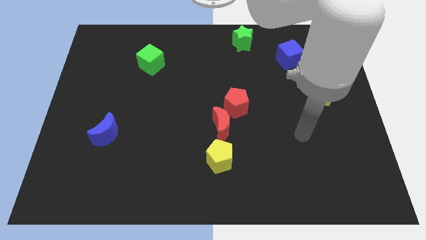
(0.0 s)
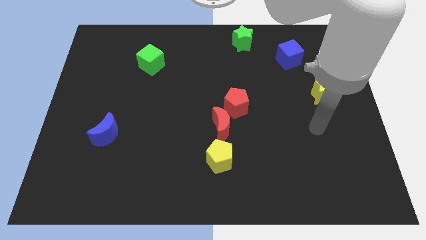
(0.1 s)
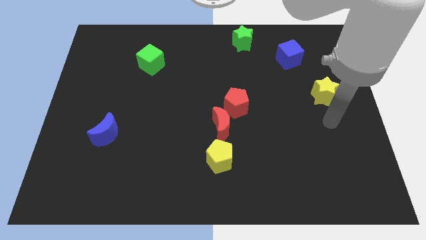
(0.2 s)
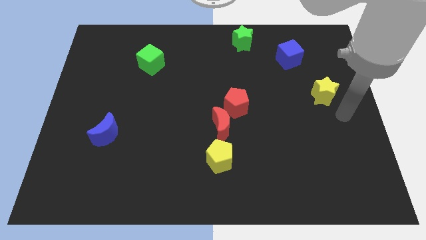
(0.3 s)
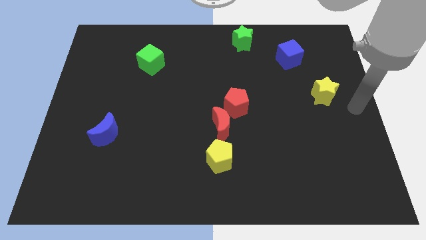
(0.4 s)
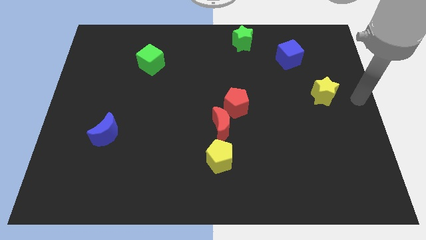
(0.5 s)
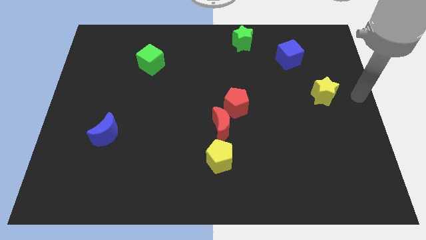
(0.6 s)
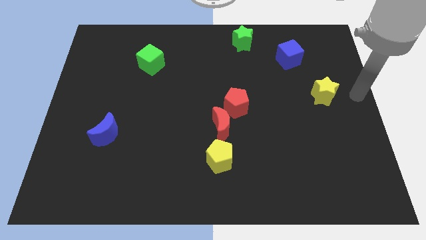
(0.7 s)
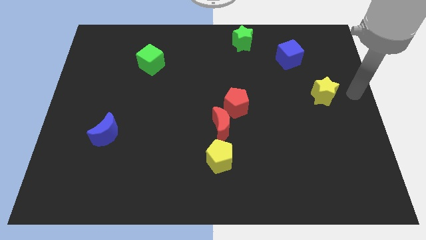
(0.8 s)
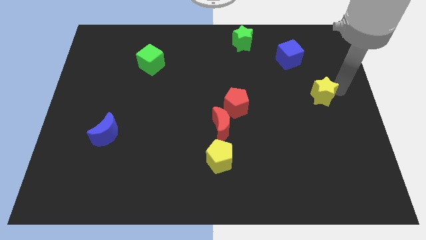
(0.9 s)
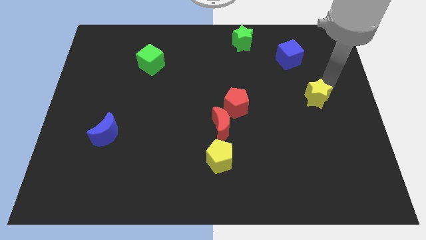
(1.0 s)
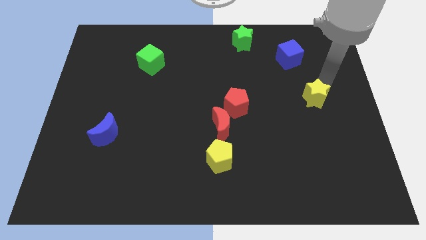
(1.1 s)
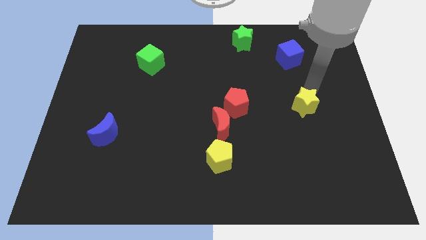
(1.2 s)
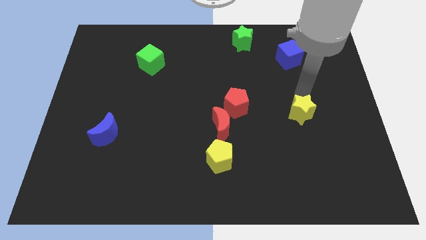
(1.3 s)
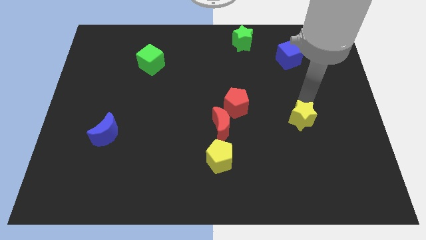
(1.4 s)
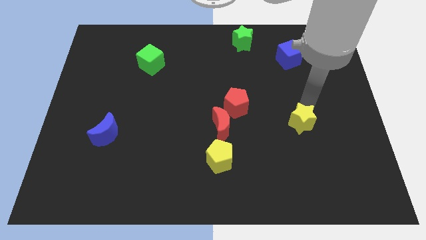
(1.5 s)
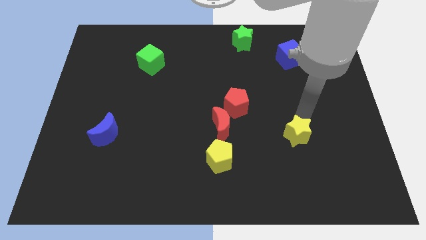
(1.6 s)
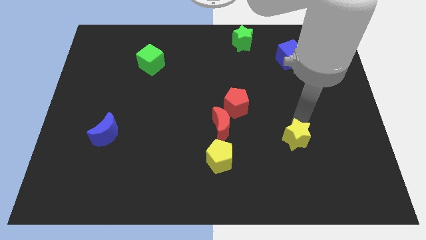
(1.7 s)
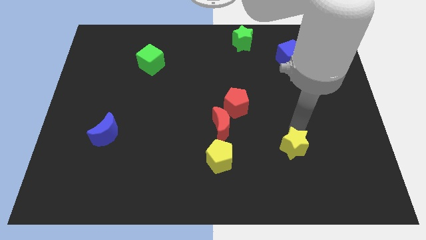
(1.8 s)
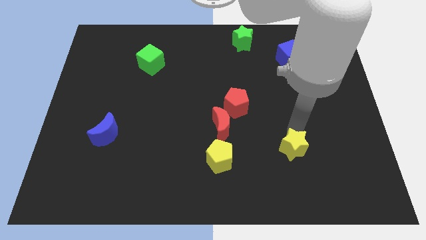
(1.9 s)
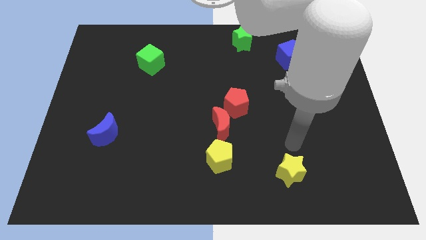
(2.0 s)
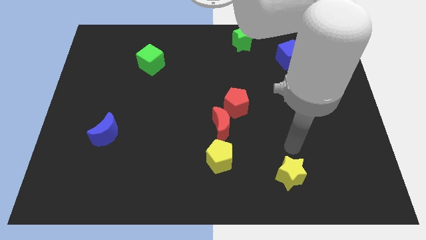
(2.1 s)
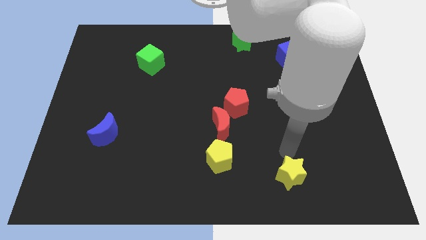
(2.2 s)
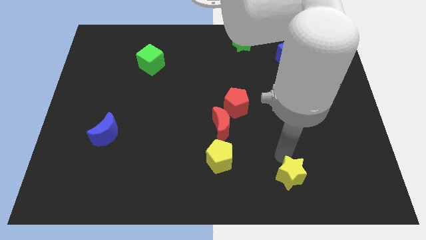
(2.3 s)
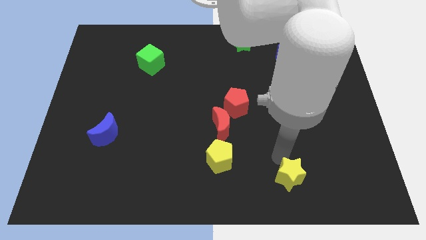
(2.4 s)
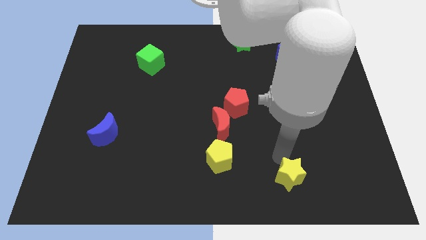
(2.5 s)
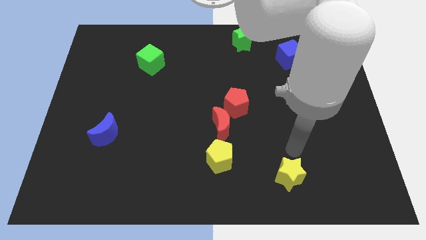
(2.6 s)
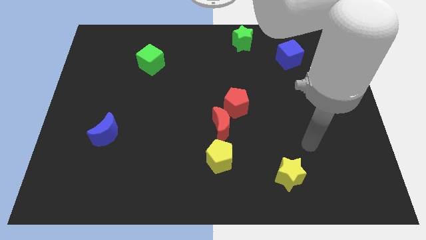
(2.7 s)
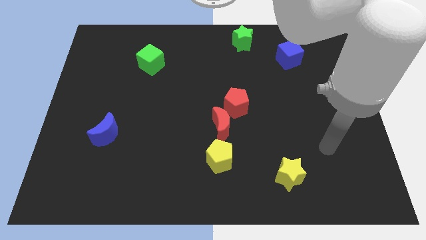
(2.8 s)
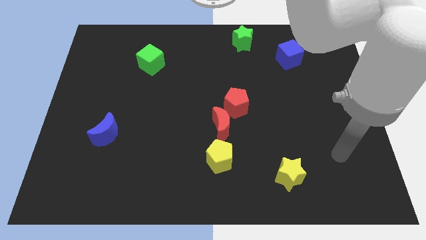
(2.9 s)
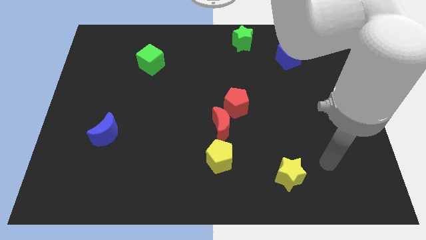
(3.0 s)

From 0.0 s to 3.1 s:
push yellow star towards bottom center

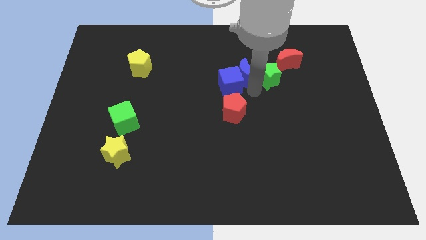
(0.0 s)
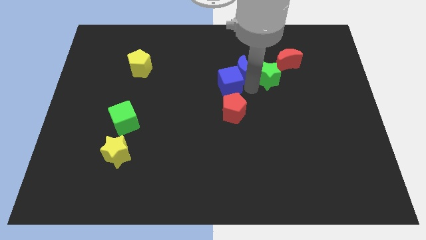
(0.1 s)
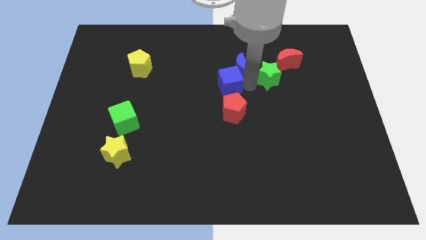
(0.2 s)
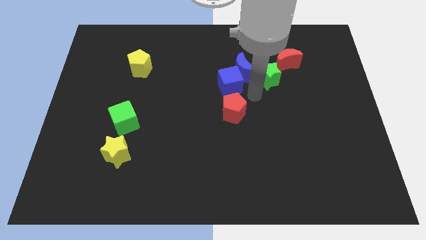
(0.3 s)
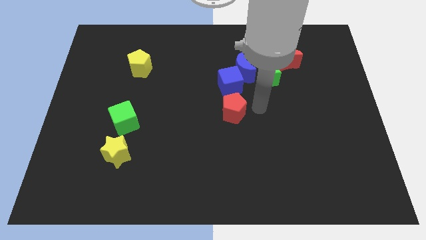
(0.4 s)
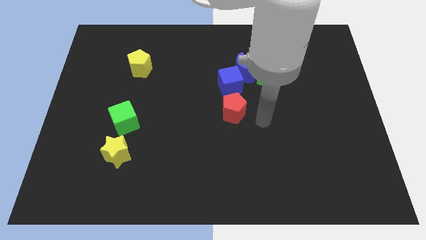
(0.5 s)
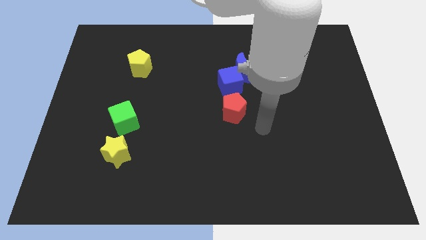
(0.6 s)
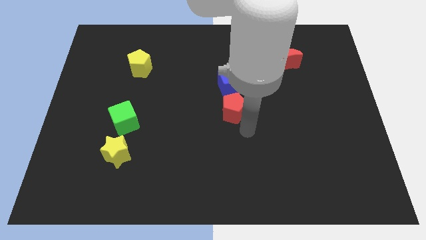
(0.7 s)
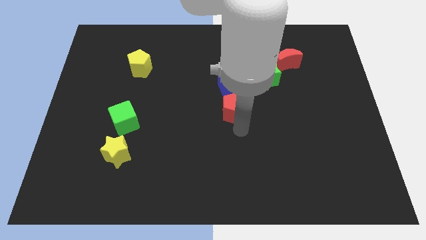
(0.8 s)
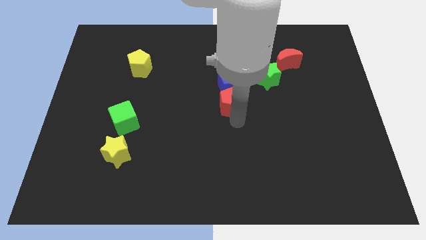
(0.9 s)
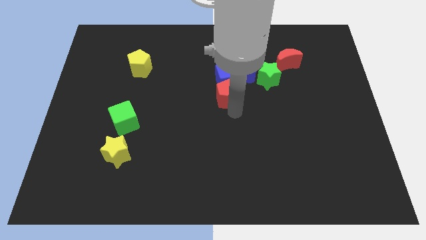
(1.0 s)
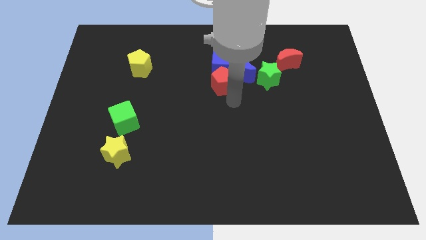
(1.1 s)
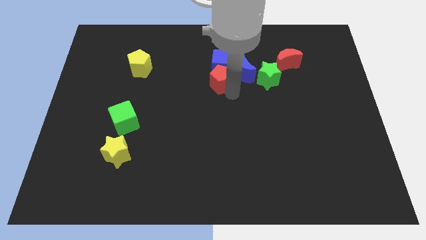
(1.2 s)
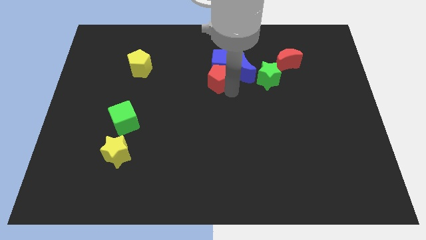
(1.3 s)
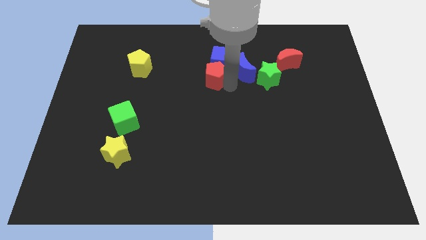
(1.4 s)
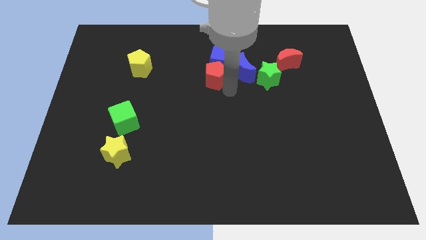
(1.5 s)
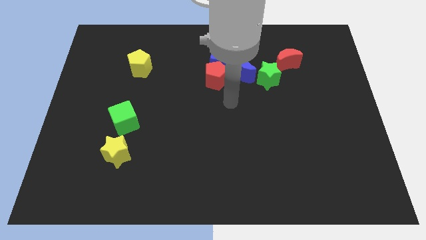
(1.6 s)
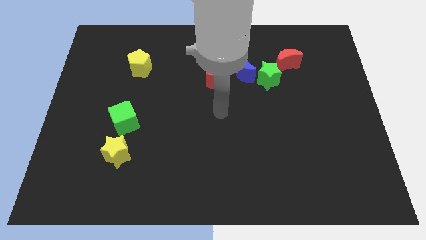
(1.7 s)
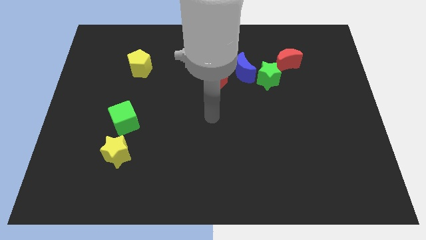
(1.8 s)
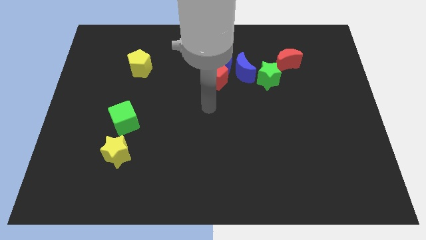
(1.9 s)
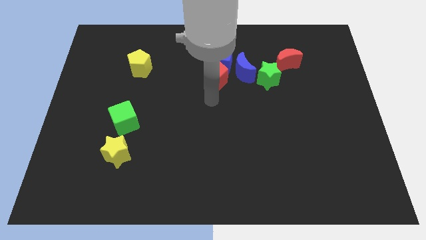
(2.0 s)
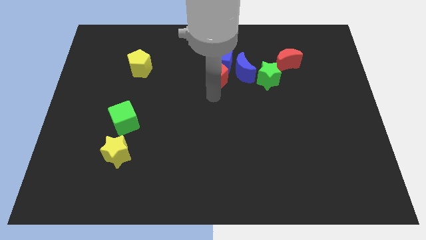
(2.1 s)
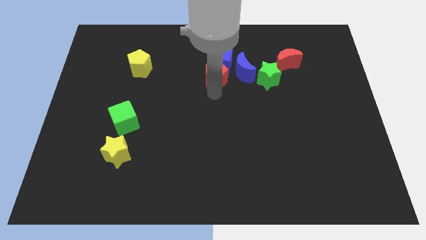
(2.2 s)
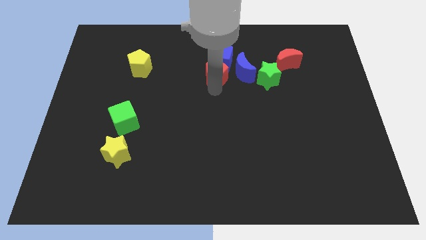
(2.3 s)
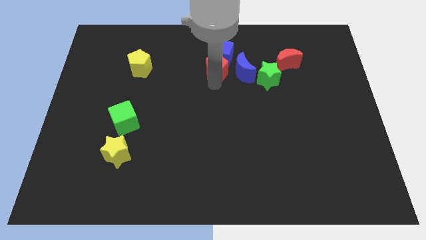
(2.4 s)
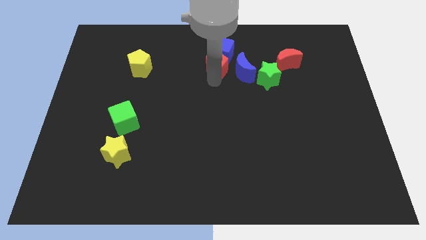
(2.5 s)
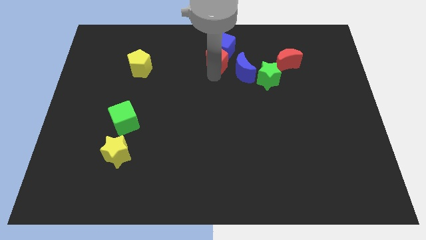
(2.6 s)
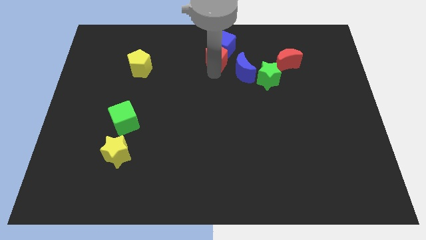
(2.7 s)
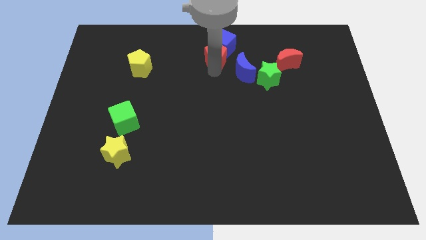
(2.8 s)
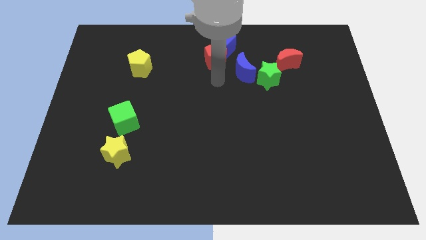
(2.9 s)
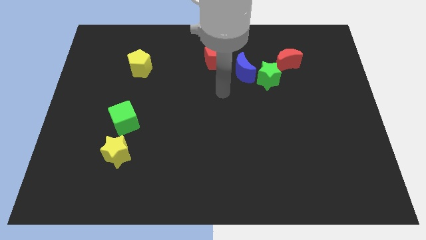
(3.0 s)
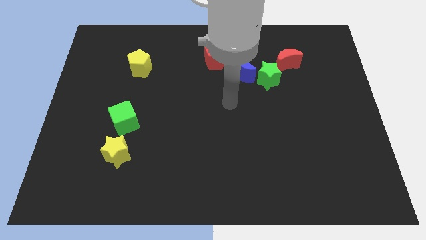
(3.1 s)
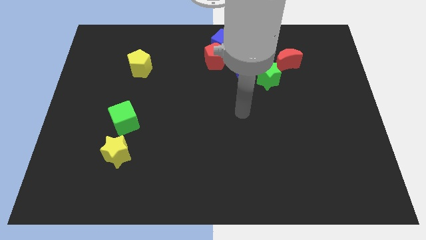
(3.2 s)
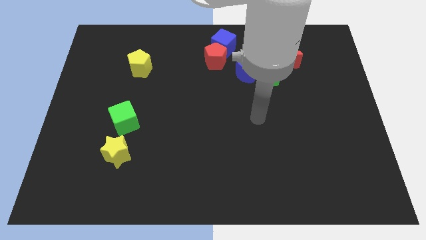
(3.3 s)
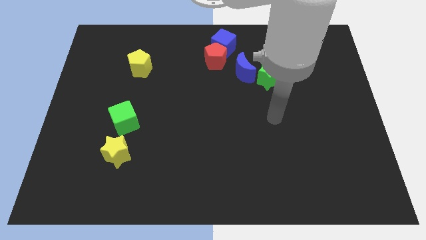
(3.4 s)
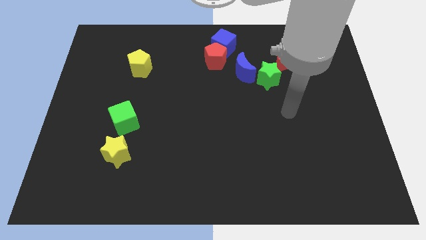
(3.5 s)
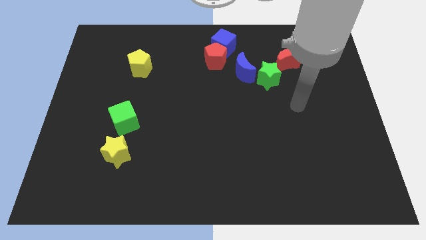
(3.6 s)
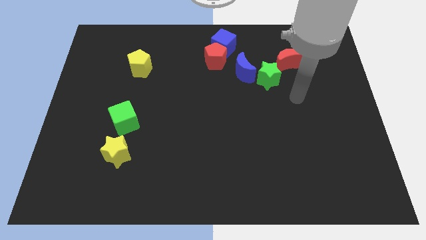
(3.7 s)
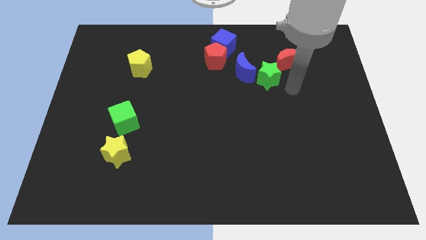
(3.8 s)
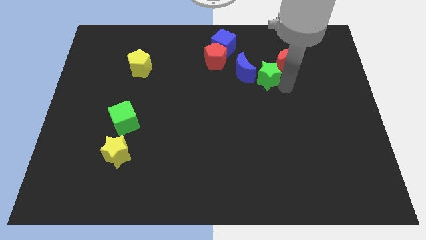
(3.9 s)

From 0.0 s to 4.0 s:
push the blue cube with a red pentagon to the top middle of the board

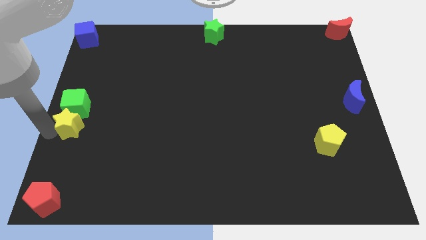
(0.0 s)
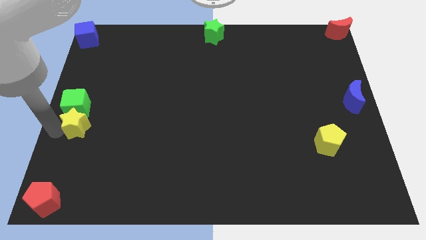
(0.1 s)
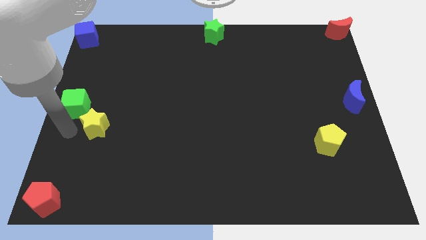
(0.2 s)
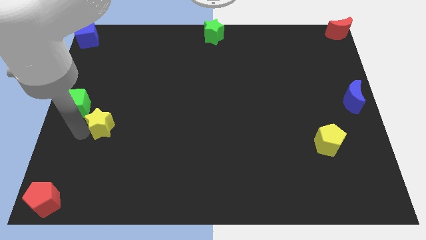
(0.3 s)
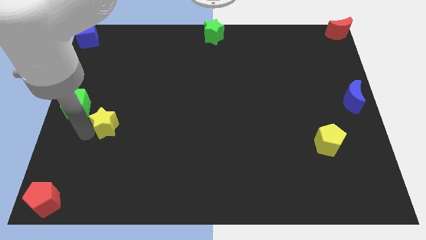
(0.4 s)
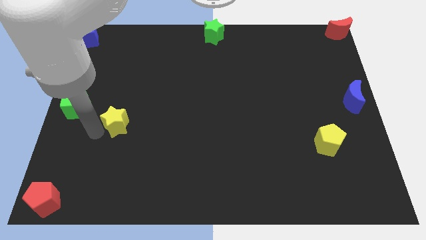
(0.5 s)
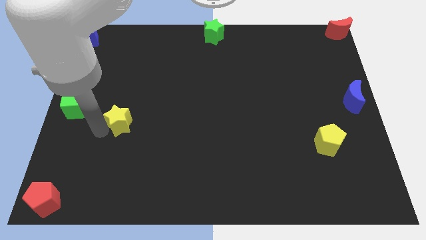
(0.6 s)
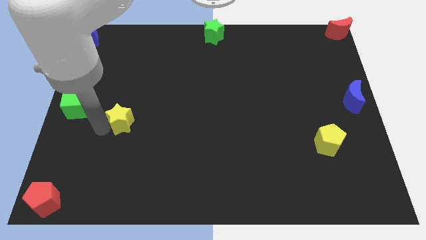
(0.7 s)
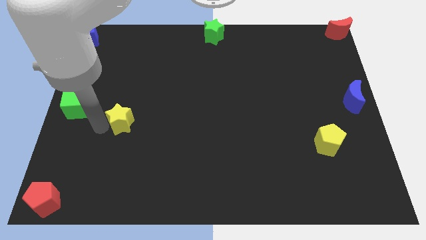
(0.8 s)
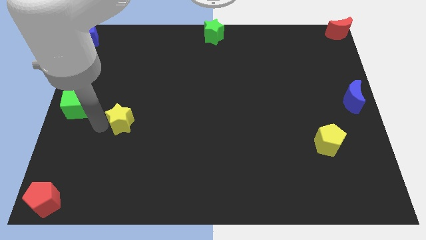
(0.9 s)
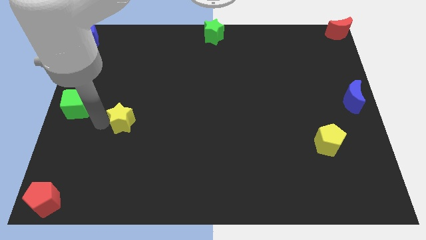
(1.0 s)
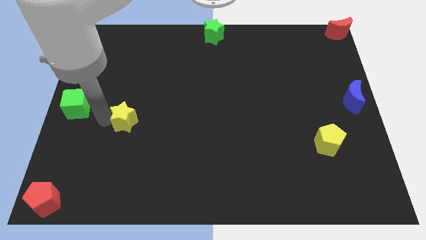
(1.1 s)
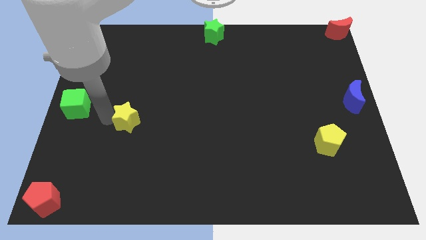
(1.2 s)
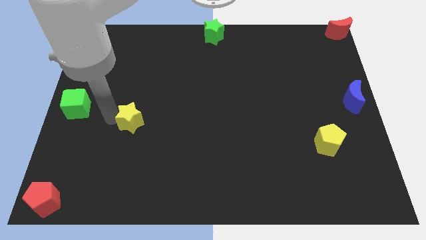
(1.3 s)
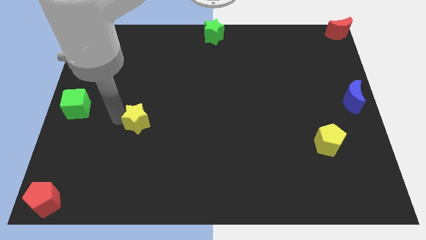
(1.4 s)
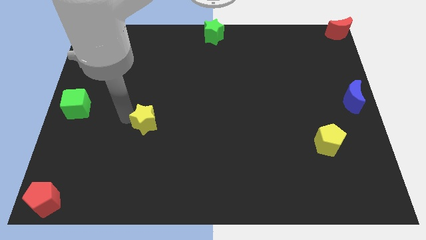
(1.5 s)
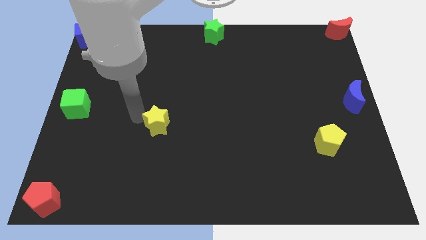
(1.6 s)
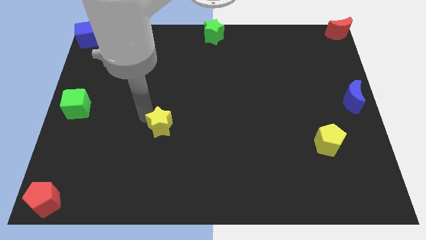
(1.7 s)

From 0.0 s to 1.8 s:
move the yellow star towards the right

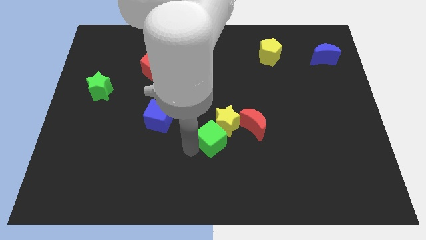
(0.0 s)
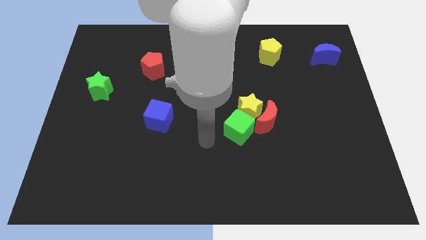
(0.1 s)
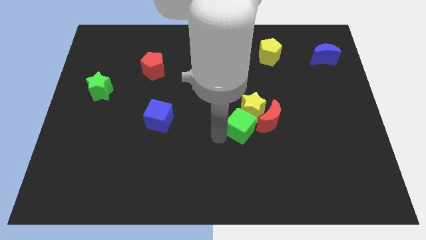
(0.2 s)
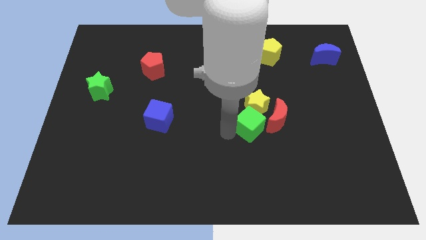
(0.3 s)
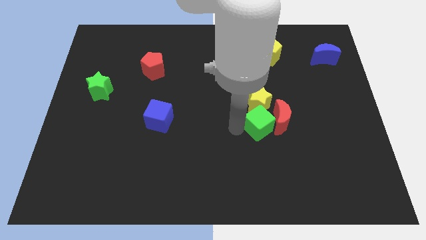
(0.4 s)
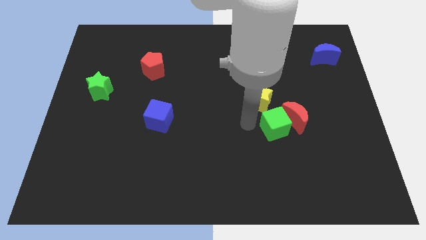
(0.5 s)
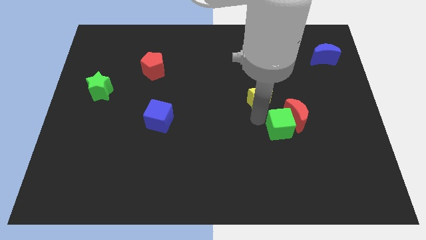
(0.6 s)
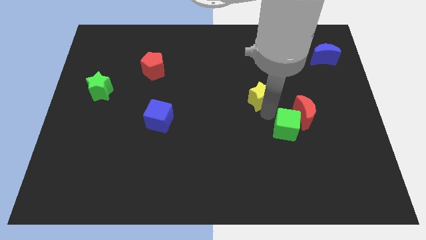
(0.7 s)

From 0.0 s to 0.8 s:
place the green cube right to the blue cube
